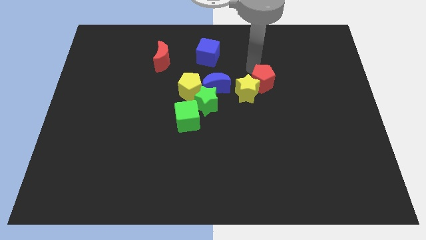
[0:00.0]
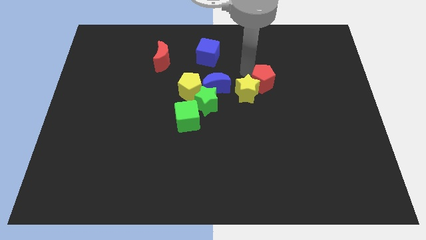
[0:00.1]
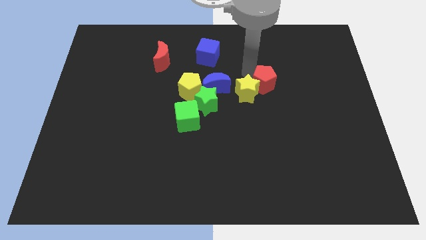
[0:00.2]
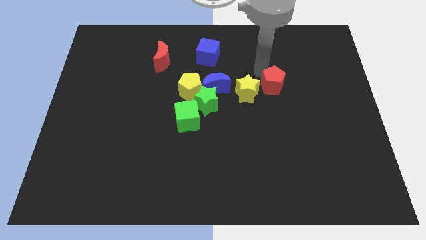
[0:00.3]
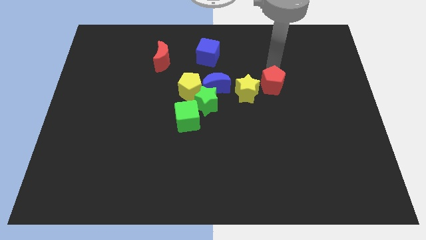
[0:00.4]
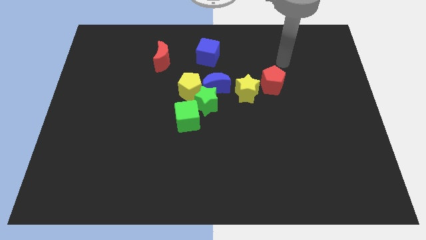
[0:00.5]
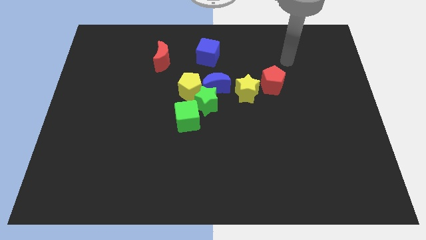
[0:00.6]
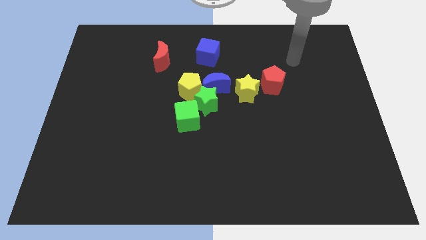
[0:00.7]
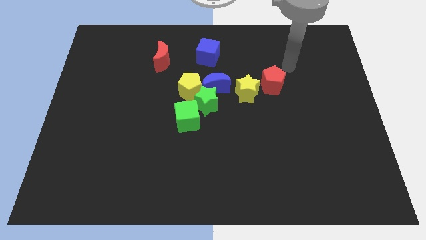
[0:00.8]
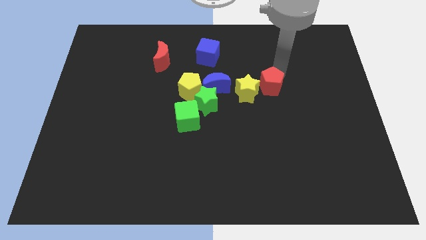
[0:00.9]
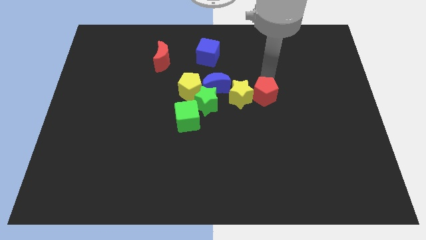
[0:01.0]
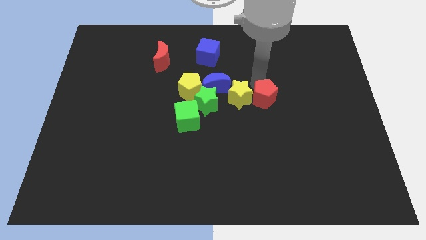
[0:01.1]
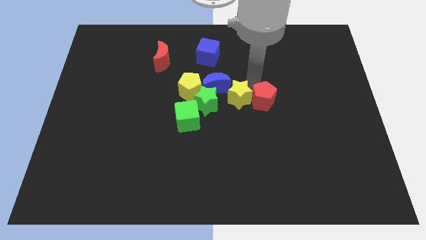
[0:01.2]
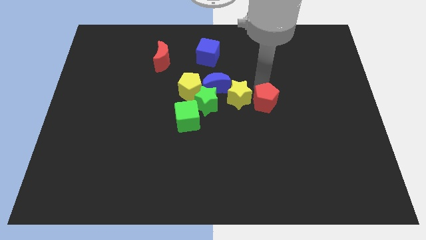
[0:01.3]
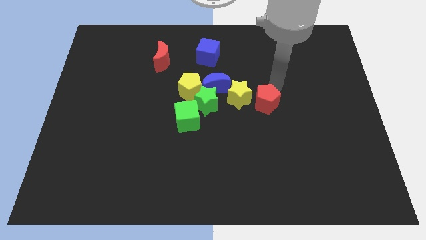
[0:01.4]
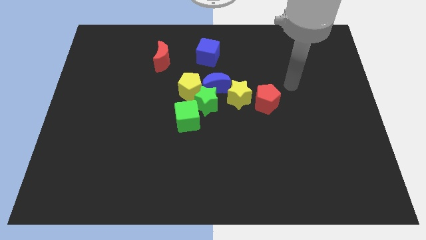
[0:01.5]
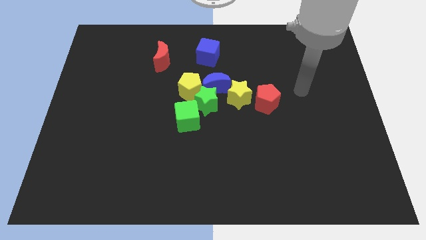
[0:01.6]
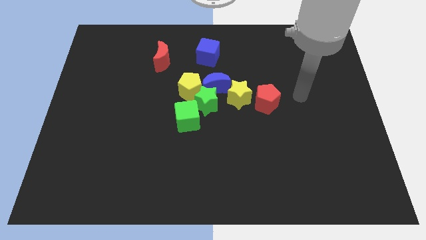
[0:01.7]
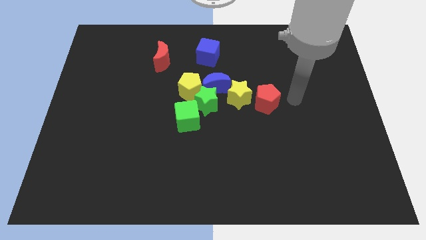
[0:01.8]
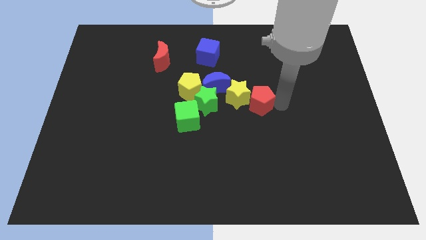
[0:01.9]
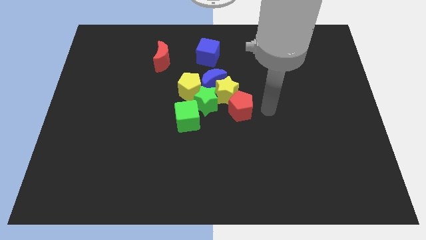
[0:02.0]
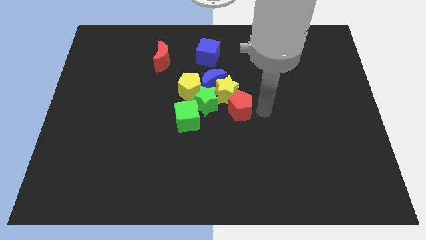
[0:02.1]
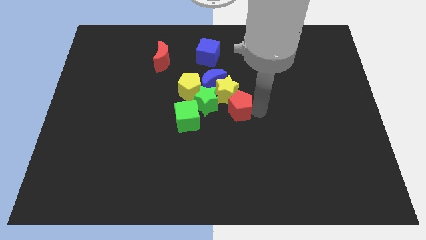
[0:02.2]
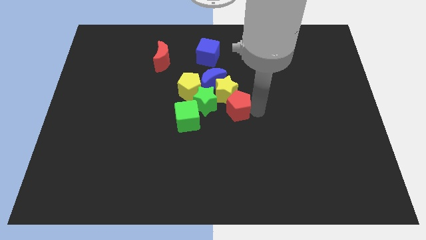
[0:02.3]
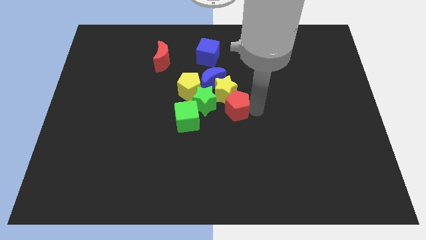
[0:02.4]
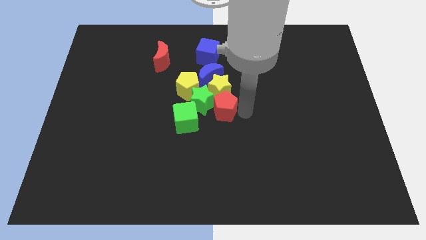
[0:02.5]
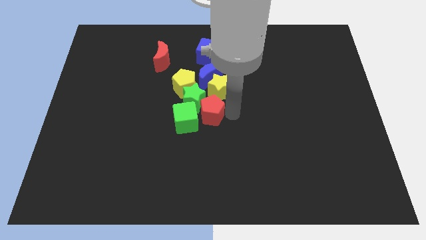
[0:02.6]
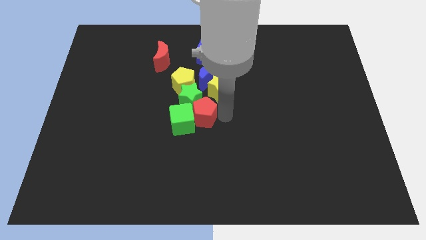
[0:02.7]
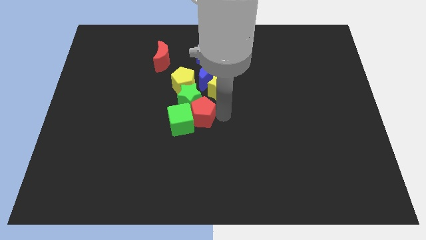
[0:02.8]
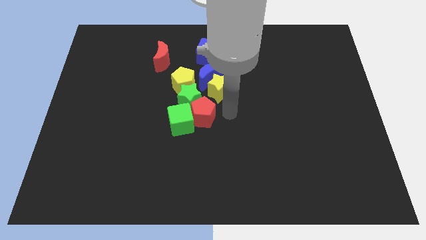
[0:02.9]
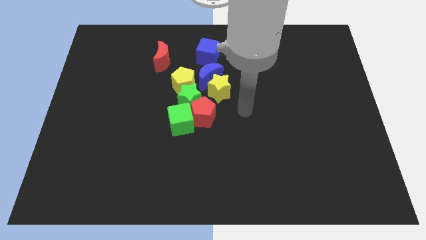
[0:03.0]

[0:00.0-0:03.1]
push red pentagon into green star

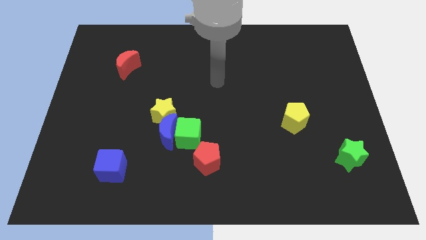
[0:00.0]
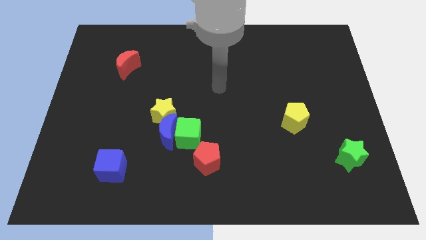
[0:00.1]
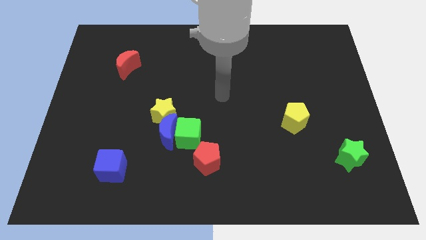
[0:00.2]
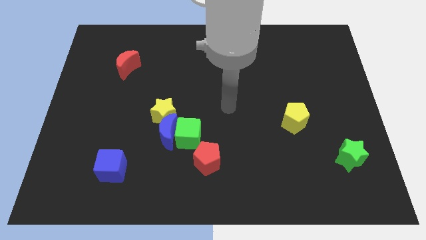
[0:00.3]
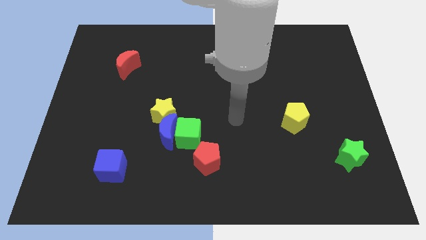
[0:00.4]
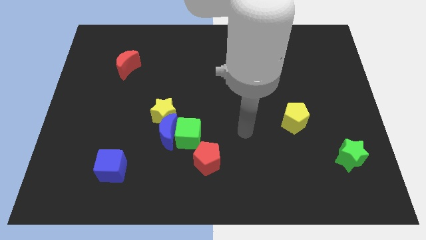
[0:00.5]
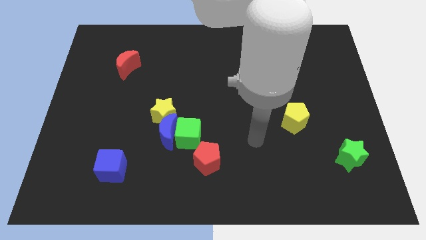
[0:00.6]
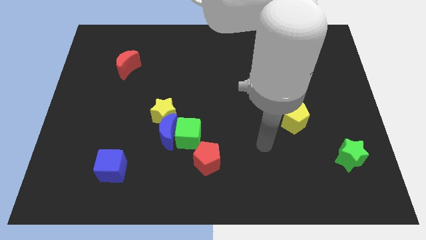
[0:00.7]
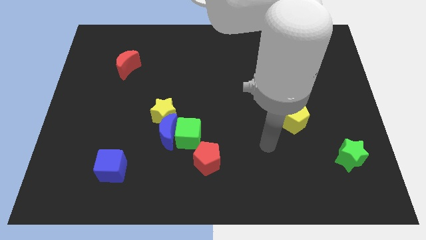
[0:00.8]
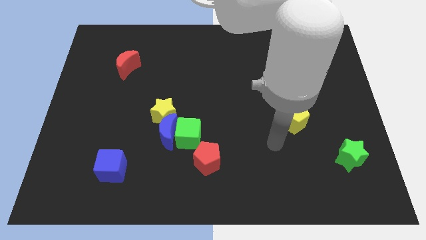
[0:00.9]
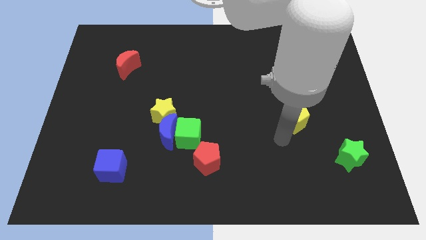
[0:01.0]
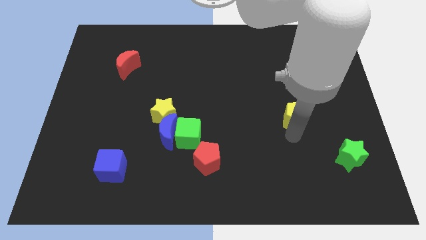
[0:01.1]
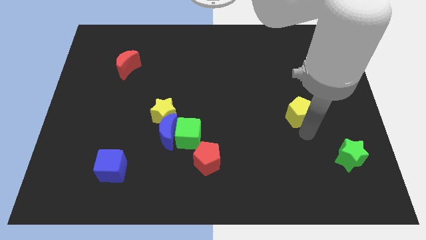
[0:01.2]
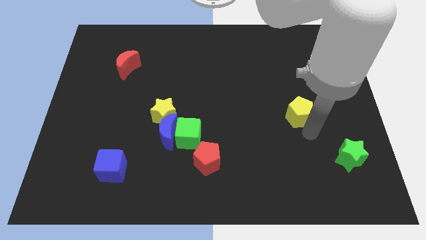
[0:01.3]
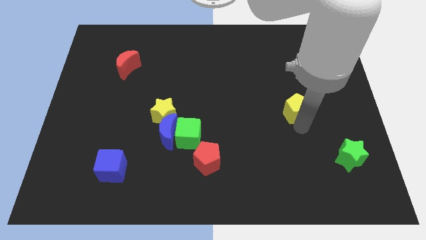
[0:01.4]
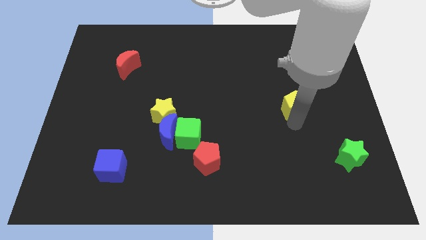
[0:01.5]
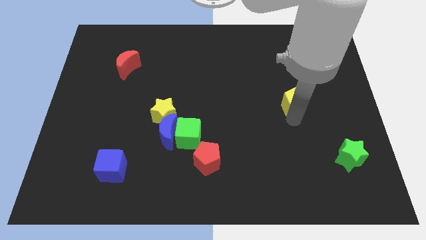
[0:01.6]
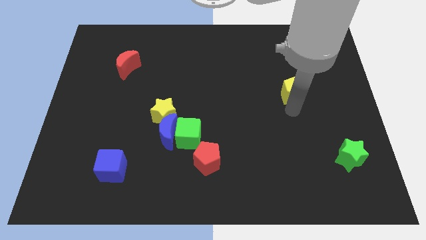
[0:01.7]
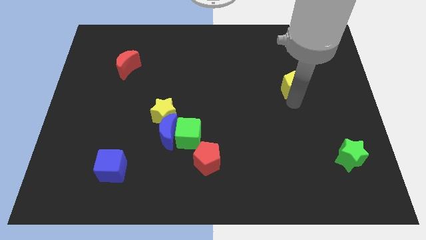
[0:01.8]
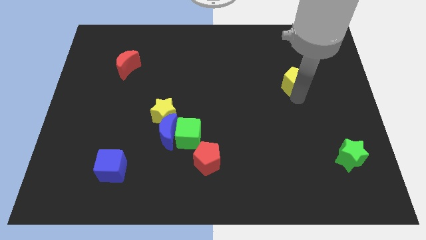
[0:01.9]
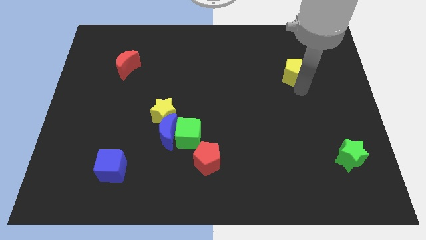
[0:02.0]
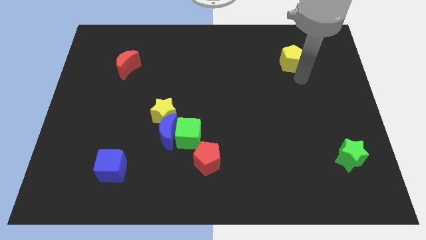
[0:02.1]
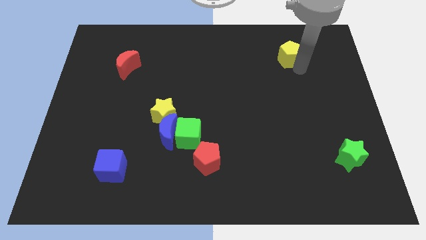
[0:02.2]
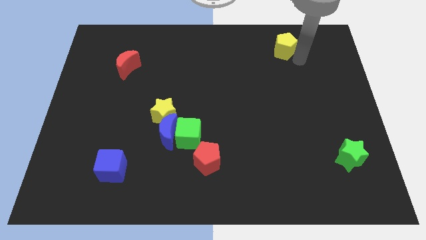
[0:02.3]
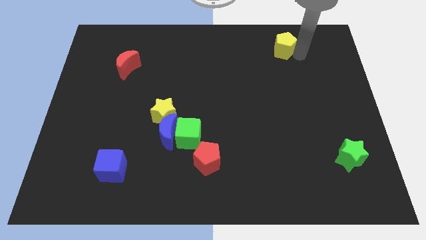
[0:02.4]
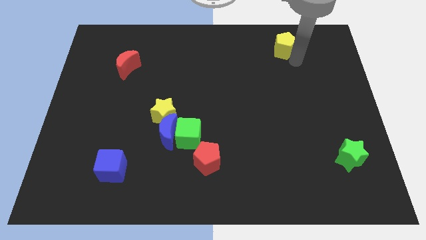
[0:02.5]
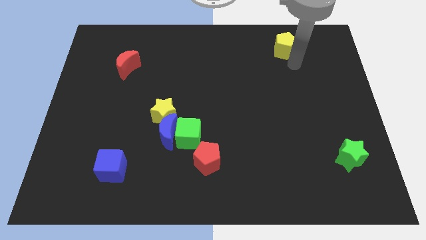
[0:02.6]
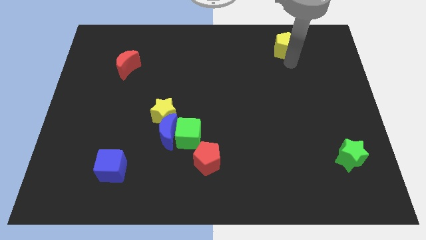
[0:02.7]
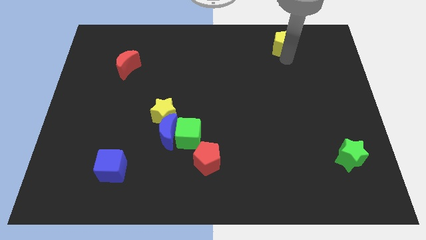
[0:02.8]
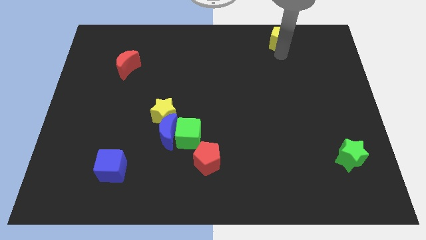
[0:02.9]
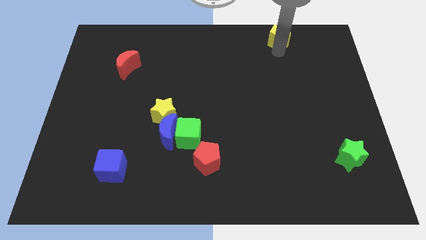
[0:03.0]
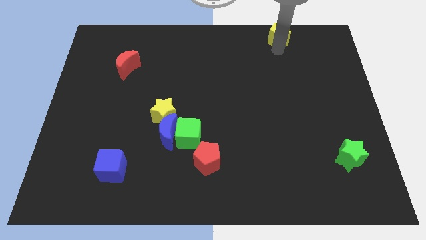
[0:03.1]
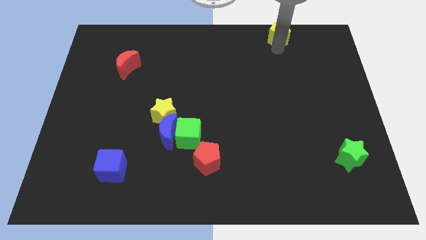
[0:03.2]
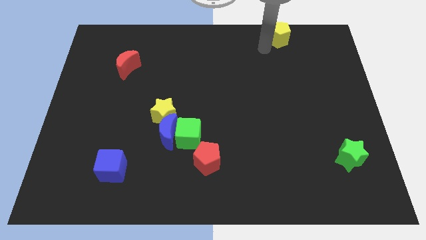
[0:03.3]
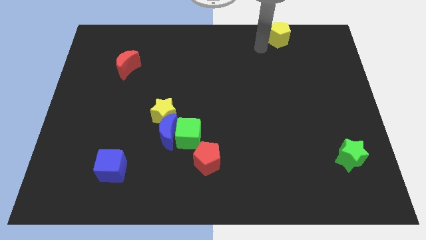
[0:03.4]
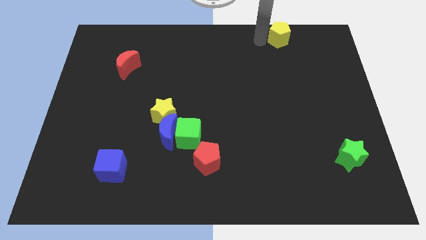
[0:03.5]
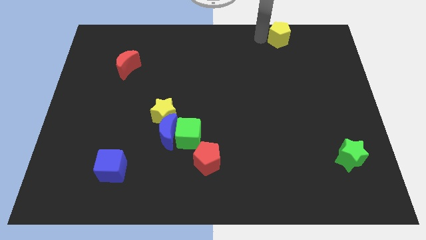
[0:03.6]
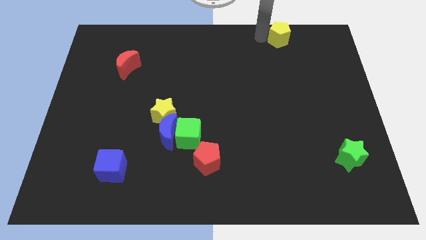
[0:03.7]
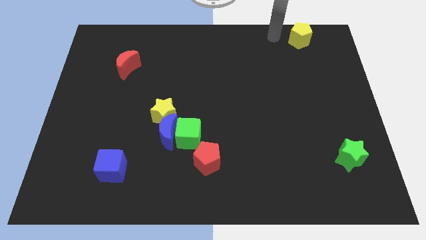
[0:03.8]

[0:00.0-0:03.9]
push the yellow pentagon to the top of the board

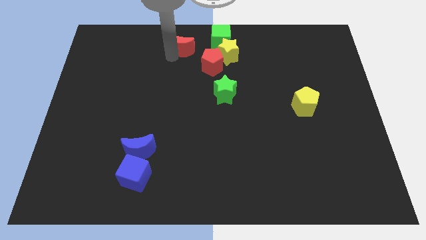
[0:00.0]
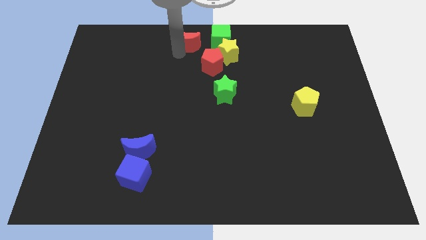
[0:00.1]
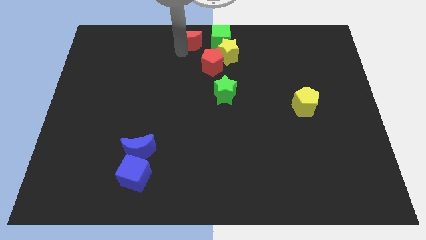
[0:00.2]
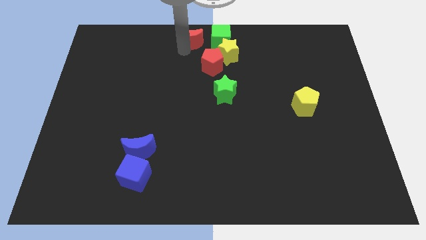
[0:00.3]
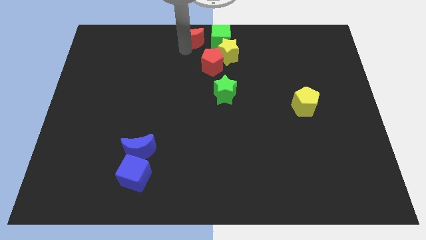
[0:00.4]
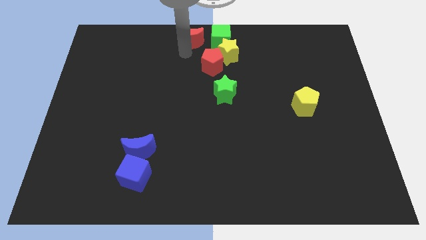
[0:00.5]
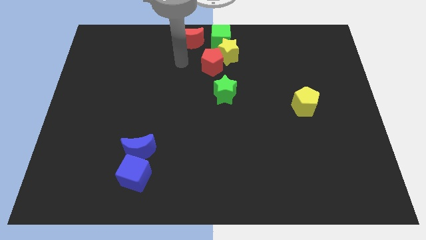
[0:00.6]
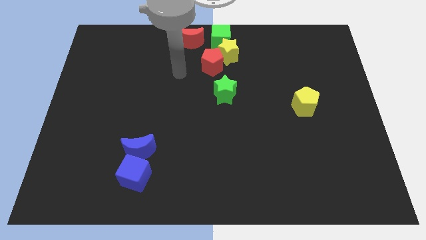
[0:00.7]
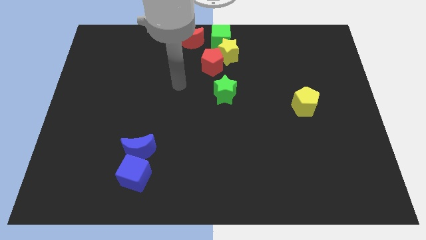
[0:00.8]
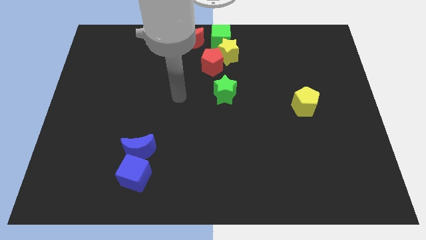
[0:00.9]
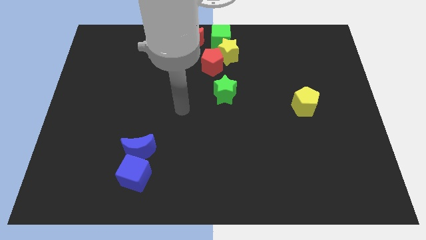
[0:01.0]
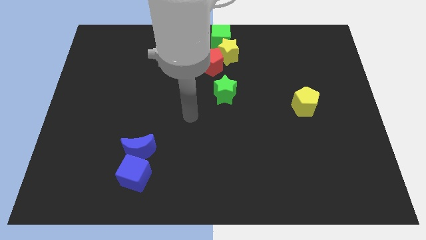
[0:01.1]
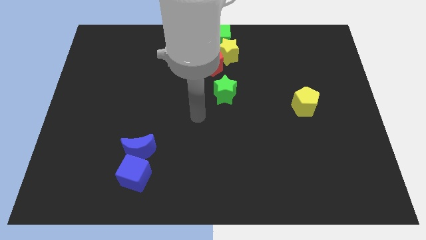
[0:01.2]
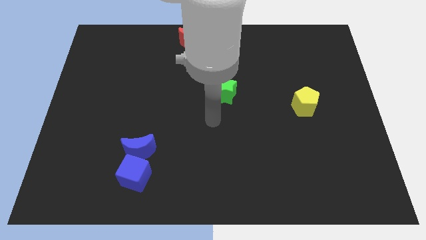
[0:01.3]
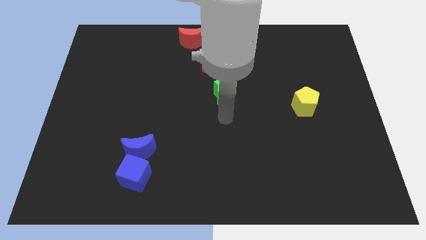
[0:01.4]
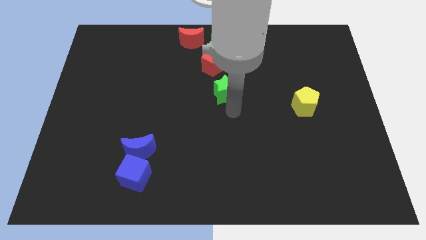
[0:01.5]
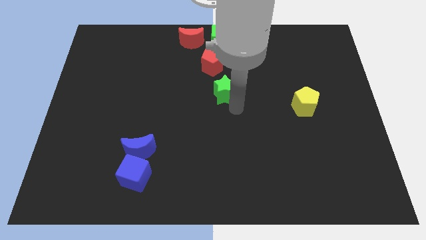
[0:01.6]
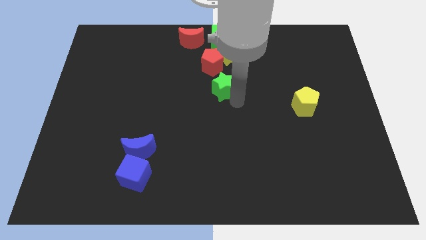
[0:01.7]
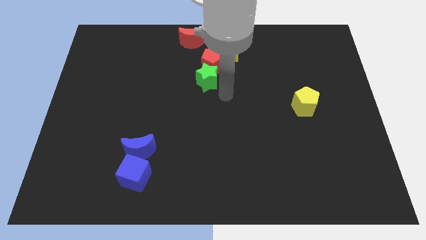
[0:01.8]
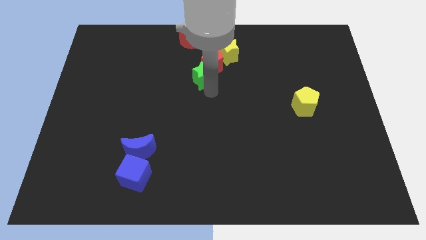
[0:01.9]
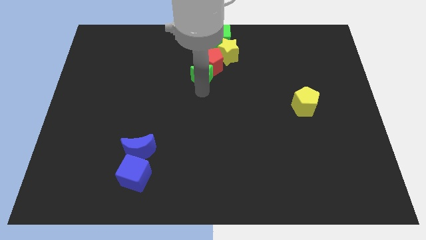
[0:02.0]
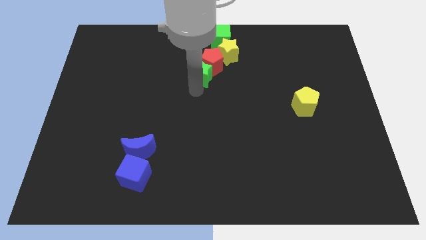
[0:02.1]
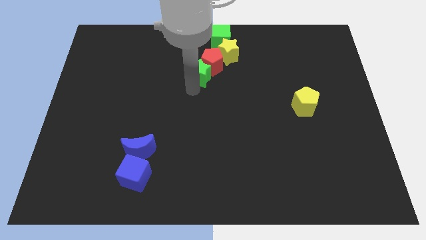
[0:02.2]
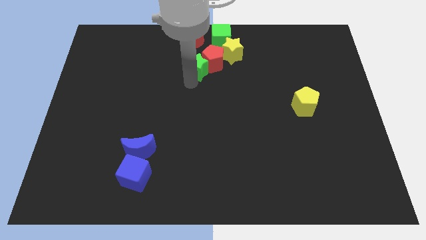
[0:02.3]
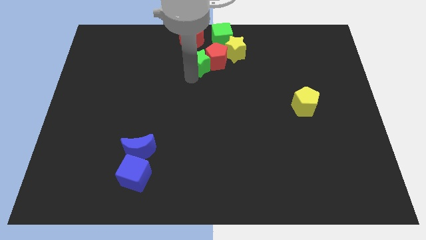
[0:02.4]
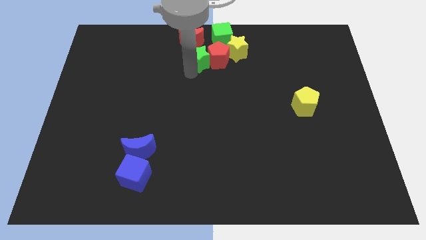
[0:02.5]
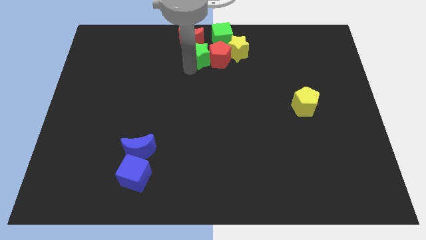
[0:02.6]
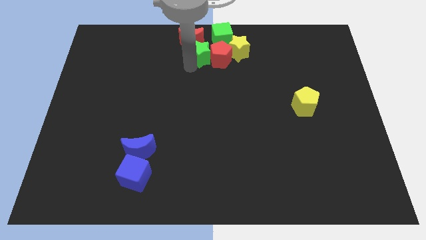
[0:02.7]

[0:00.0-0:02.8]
place the green star left to the red pentagon
